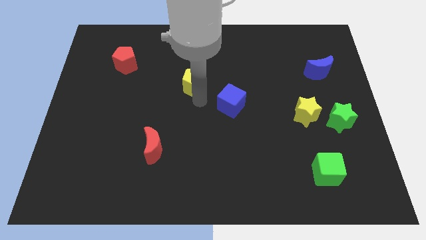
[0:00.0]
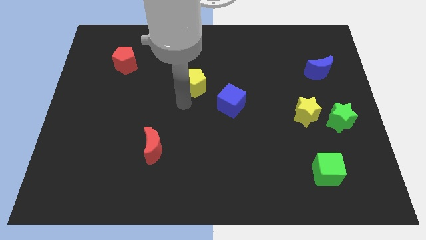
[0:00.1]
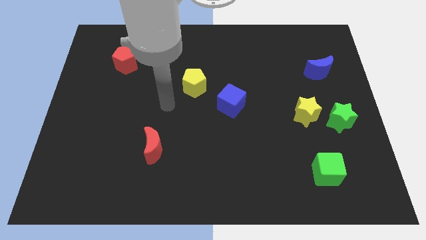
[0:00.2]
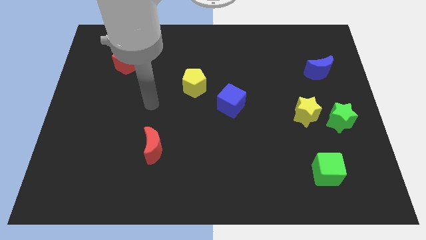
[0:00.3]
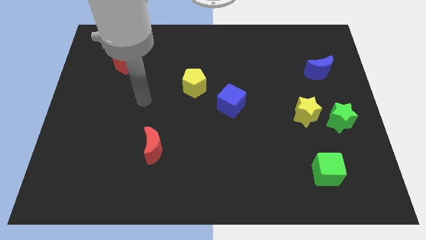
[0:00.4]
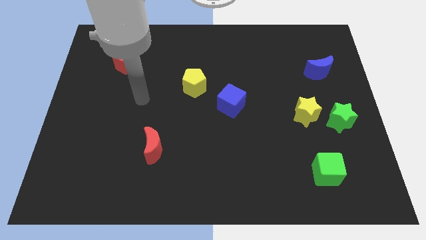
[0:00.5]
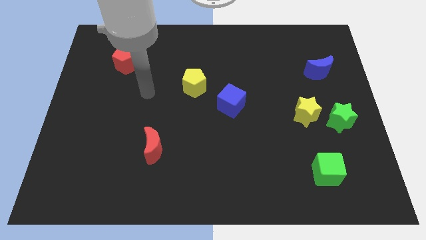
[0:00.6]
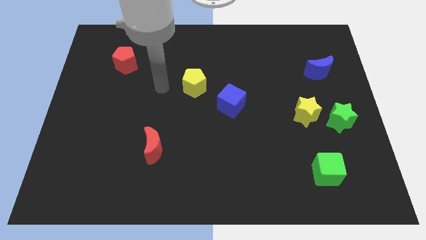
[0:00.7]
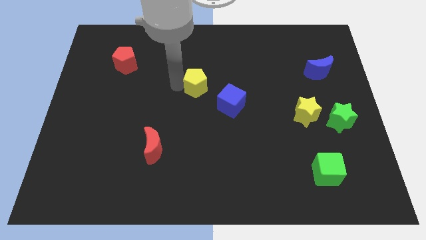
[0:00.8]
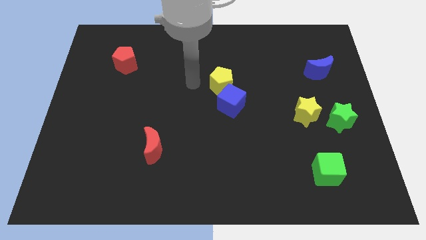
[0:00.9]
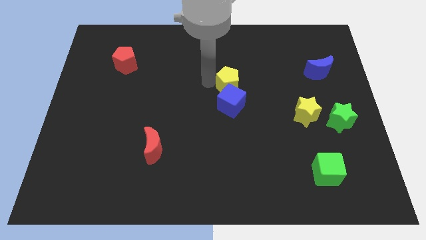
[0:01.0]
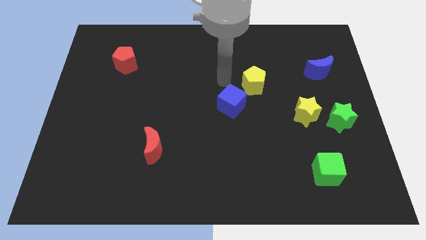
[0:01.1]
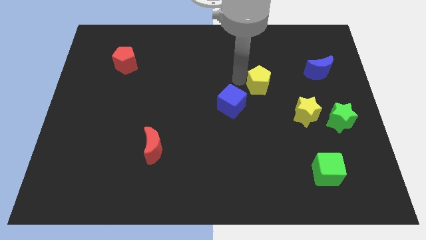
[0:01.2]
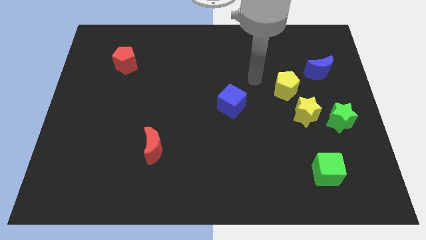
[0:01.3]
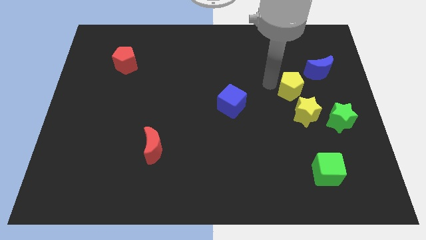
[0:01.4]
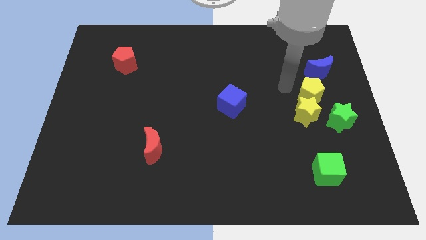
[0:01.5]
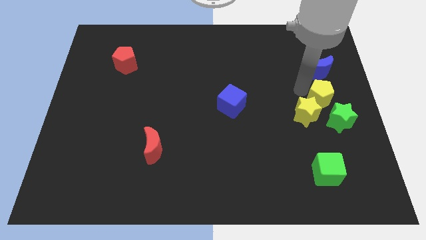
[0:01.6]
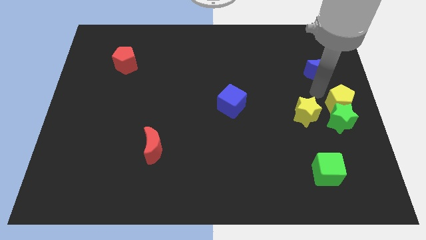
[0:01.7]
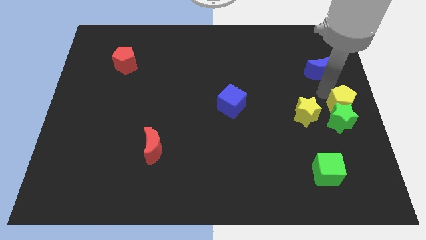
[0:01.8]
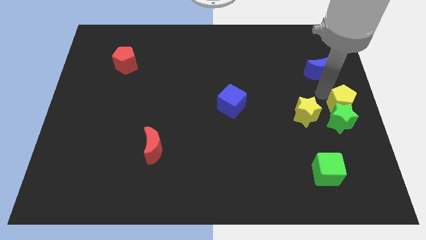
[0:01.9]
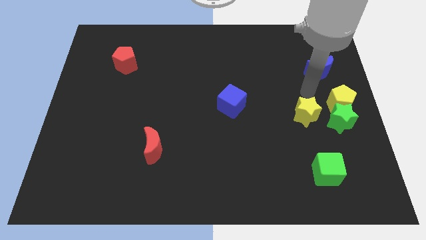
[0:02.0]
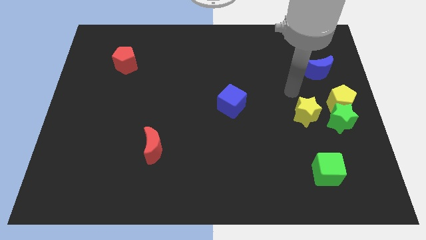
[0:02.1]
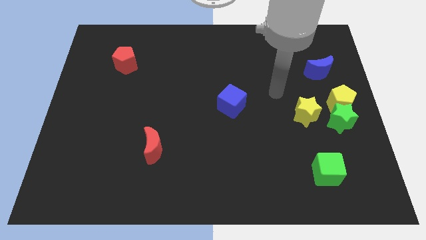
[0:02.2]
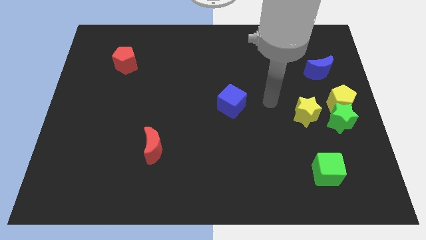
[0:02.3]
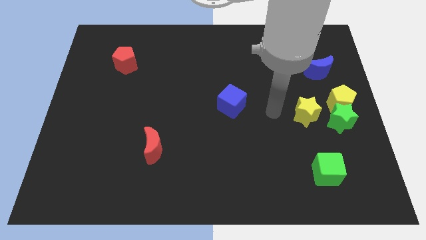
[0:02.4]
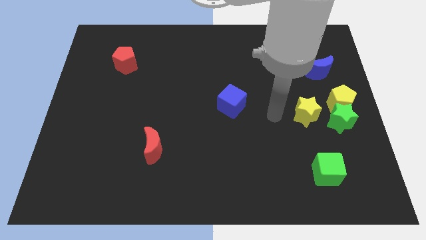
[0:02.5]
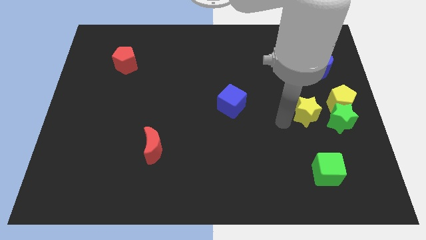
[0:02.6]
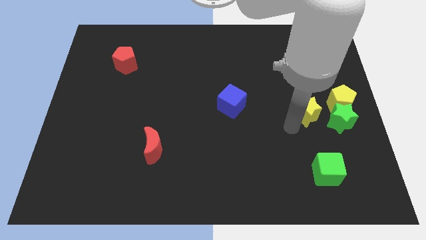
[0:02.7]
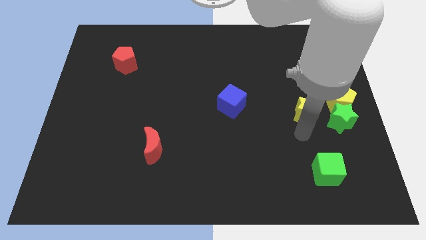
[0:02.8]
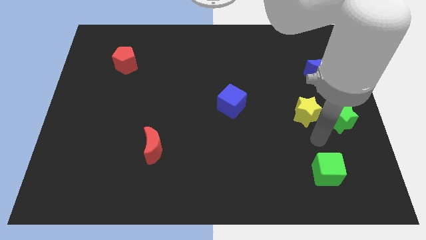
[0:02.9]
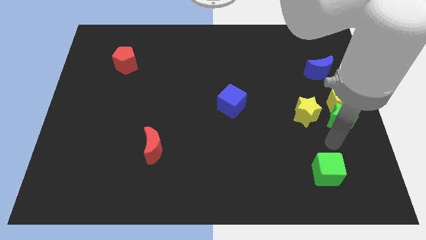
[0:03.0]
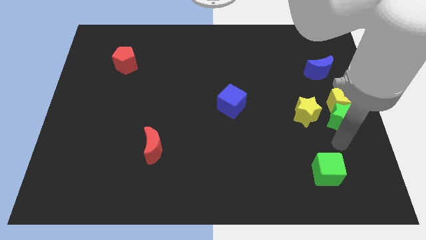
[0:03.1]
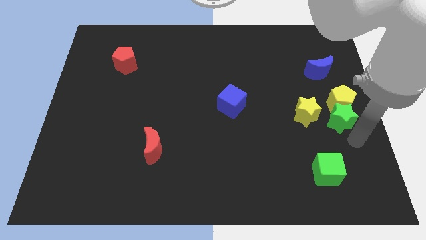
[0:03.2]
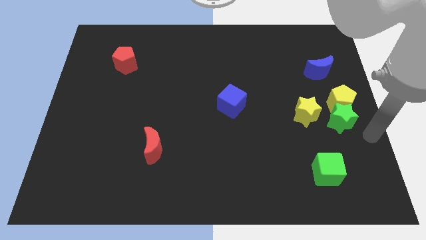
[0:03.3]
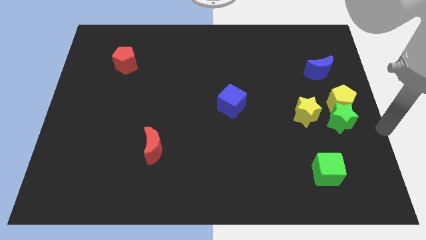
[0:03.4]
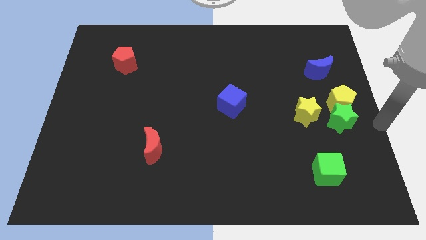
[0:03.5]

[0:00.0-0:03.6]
push the yellow pentagon to the right of the board

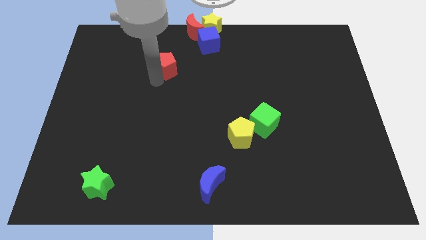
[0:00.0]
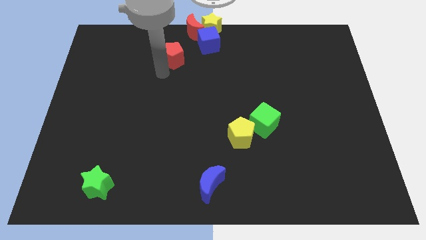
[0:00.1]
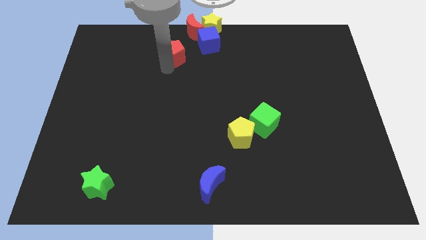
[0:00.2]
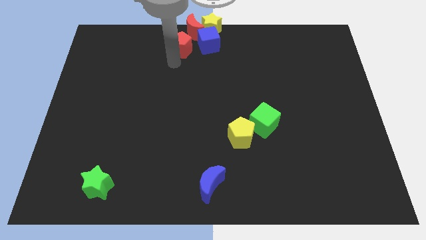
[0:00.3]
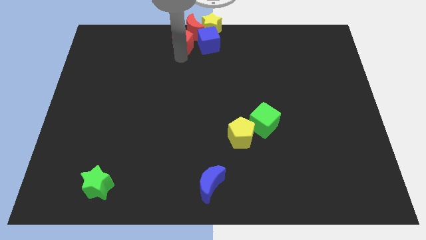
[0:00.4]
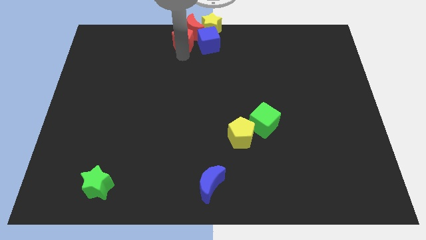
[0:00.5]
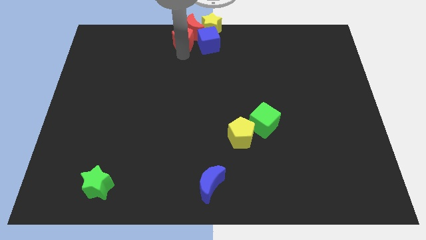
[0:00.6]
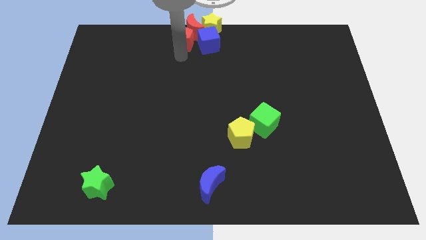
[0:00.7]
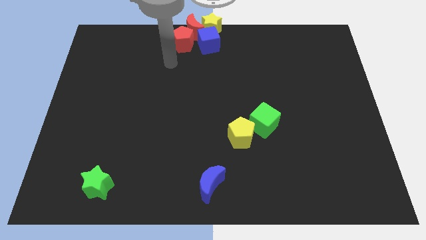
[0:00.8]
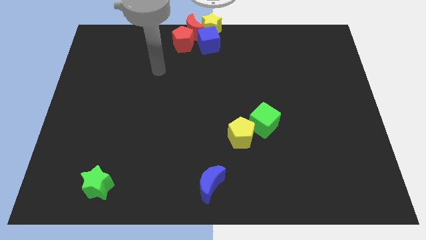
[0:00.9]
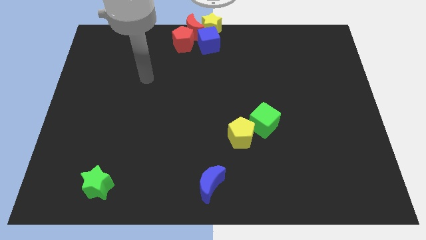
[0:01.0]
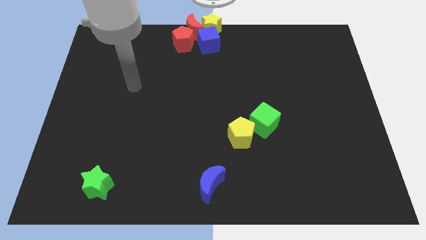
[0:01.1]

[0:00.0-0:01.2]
push the red pentagon towards the red crescent

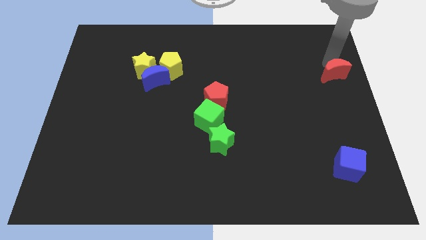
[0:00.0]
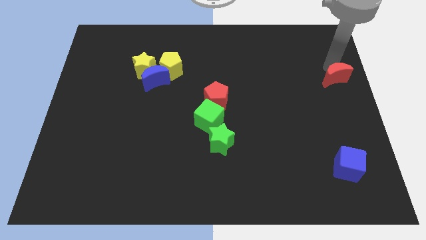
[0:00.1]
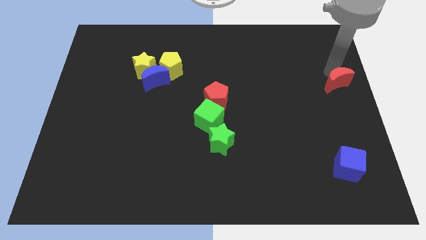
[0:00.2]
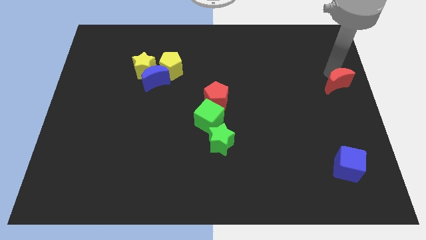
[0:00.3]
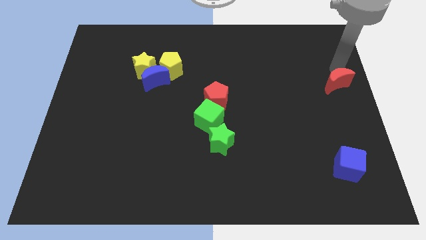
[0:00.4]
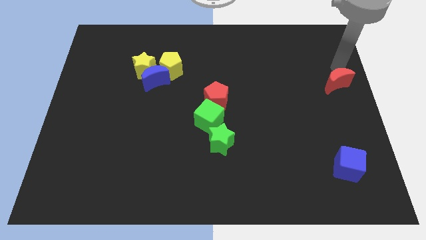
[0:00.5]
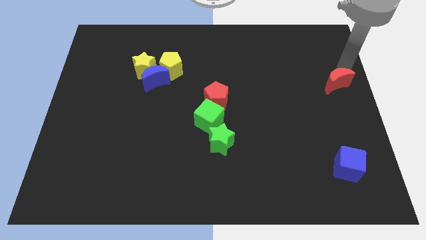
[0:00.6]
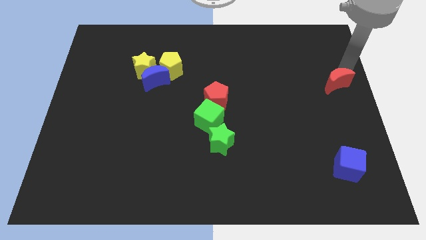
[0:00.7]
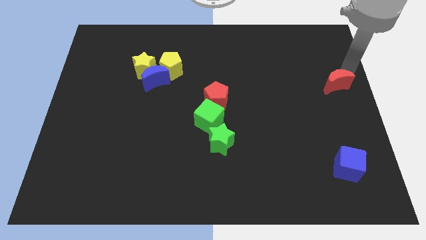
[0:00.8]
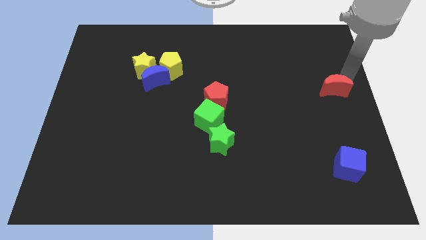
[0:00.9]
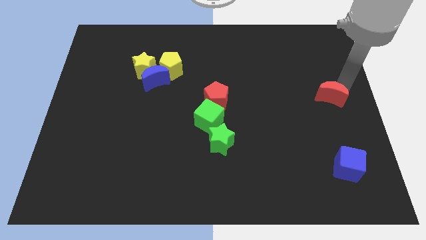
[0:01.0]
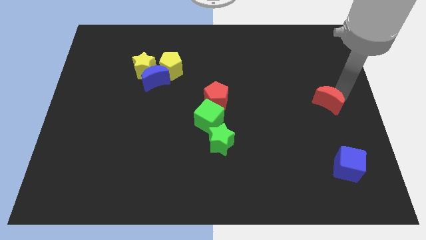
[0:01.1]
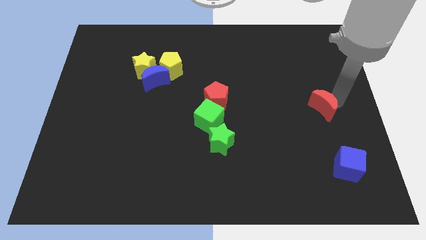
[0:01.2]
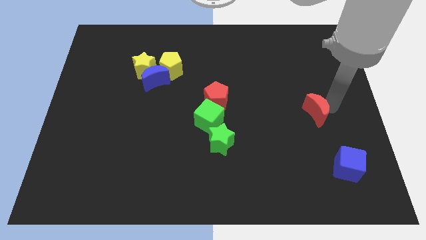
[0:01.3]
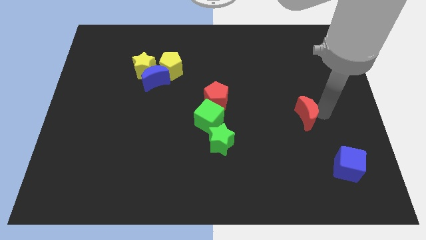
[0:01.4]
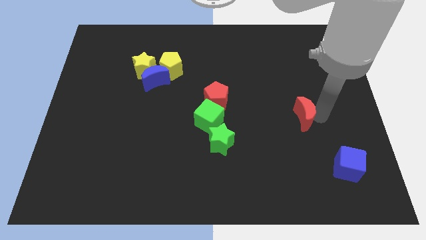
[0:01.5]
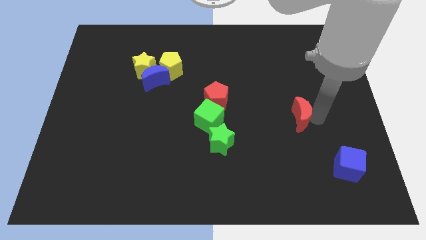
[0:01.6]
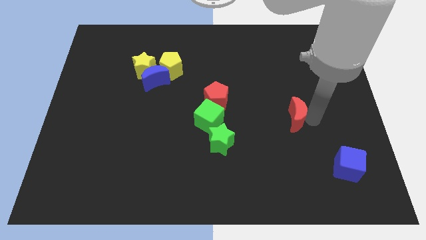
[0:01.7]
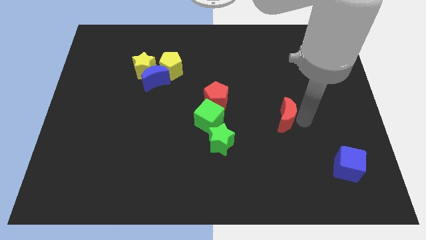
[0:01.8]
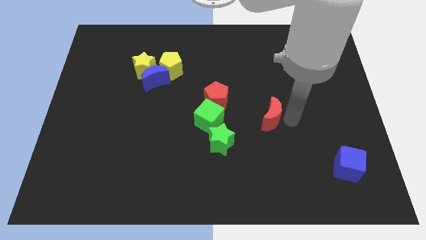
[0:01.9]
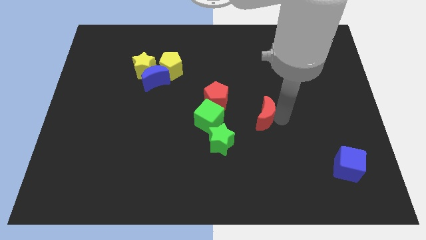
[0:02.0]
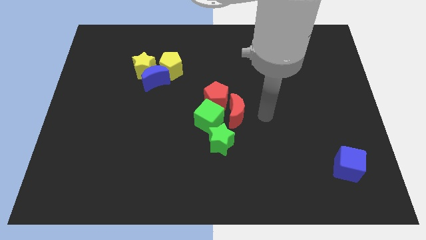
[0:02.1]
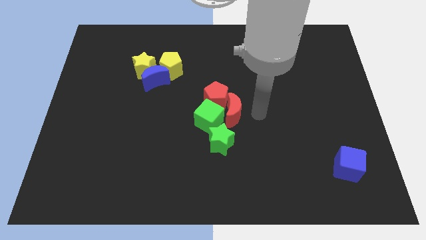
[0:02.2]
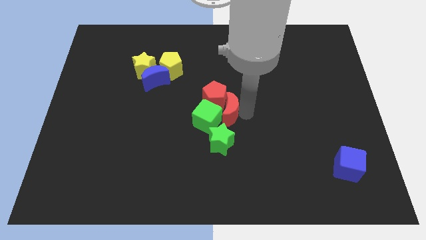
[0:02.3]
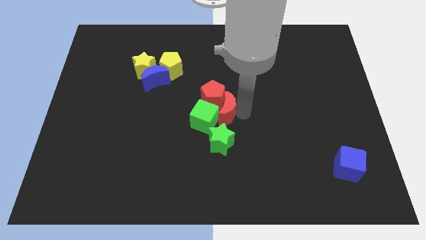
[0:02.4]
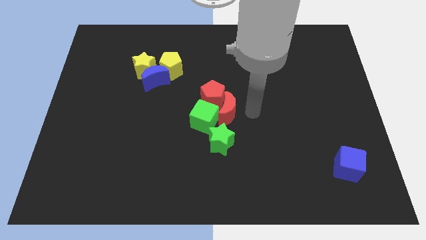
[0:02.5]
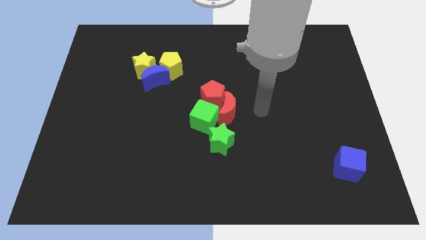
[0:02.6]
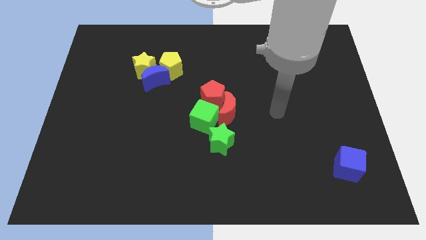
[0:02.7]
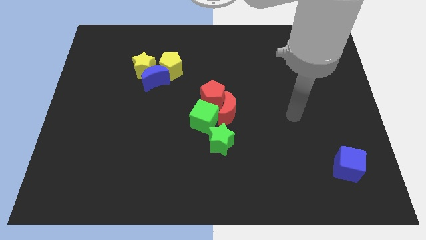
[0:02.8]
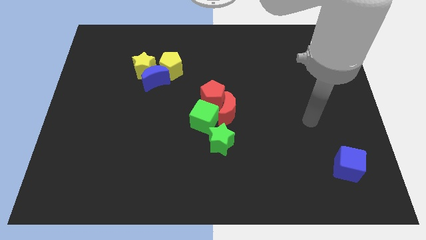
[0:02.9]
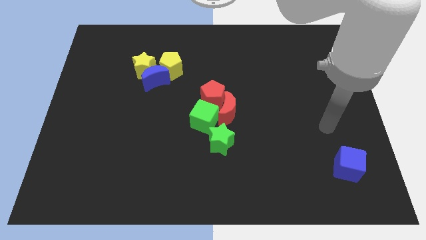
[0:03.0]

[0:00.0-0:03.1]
drag the red moon and place it near green cube

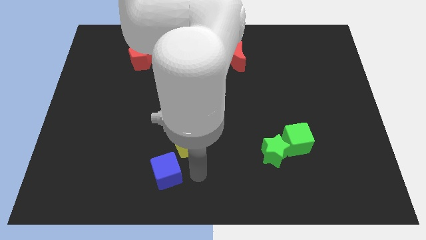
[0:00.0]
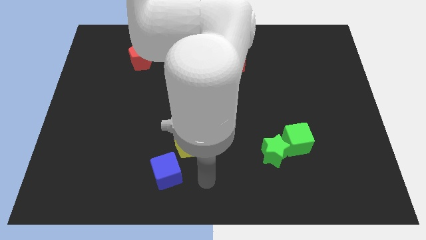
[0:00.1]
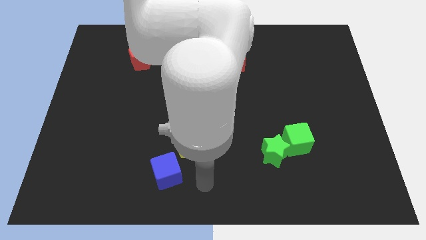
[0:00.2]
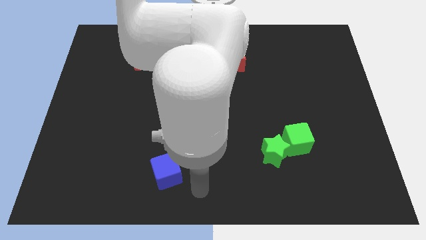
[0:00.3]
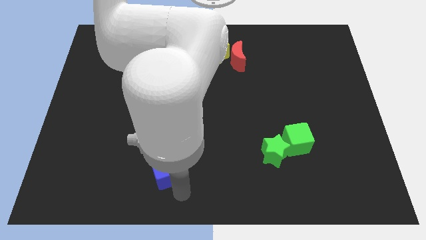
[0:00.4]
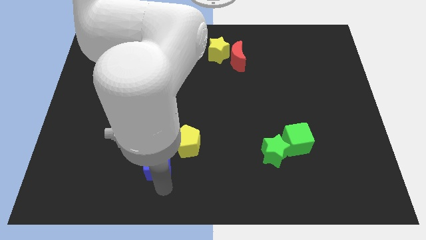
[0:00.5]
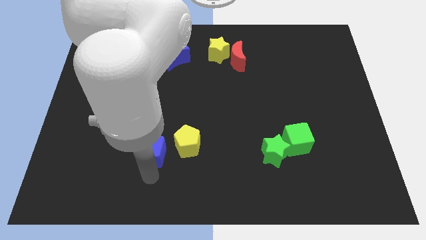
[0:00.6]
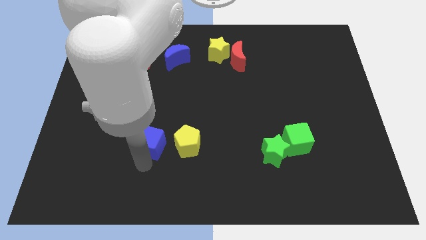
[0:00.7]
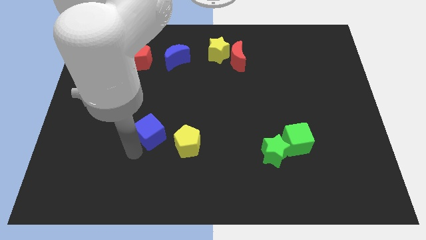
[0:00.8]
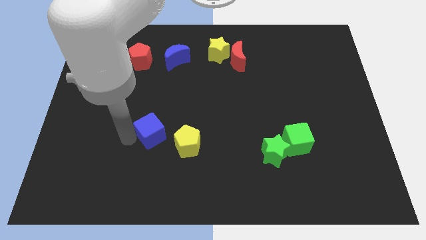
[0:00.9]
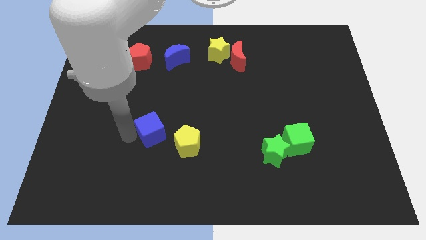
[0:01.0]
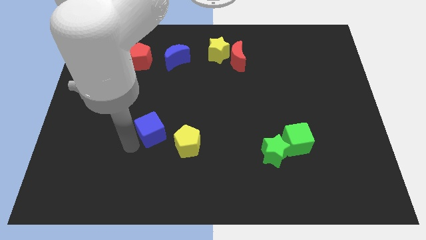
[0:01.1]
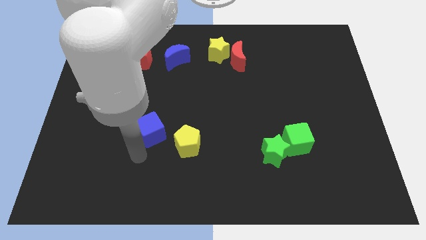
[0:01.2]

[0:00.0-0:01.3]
move the blue cube top left to the yellow pentagon
